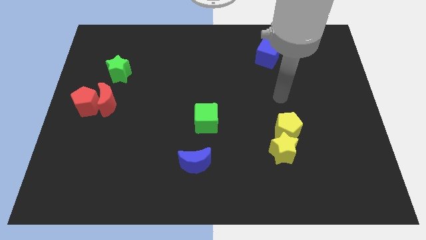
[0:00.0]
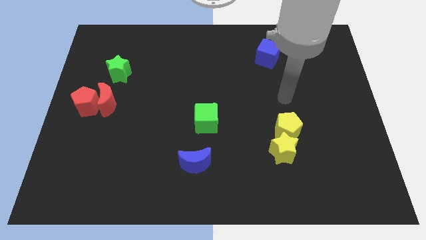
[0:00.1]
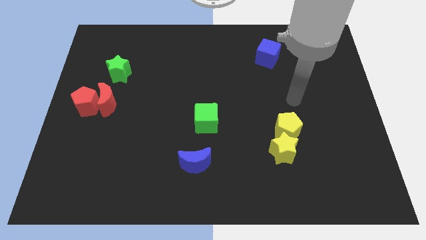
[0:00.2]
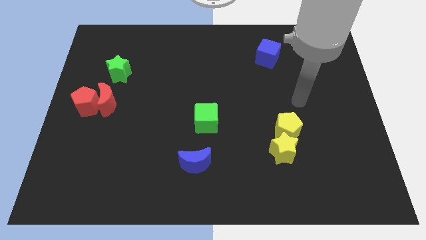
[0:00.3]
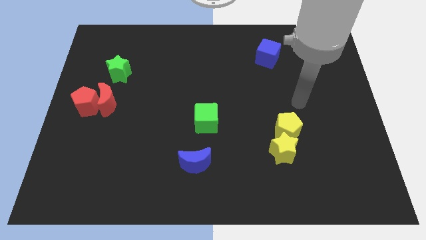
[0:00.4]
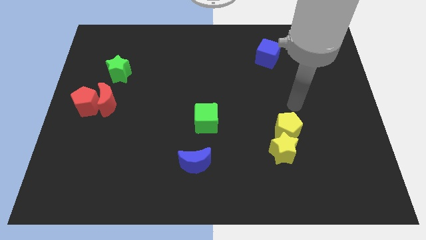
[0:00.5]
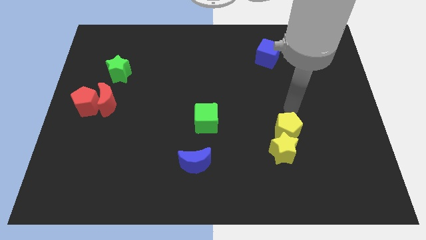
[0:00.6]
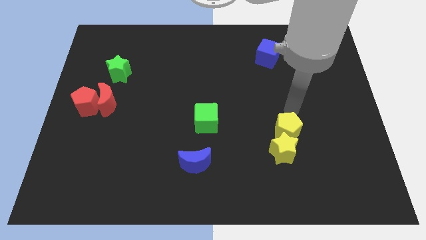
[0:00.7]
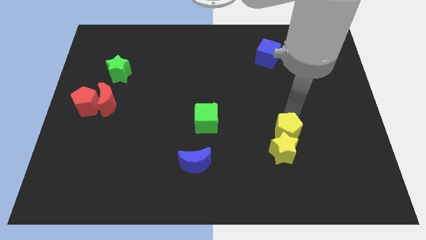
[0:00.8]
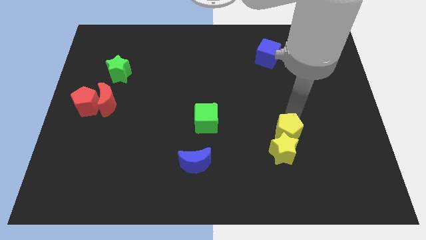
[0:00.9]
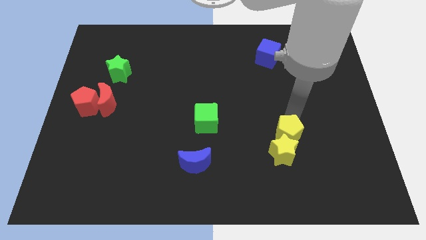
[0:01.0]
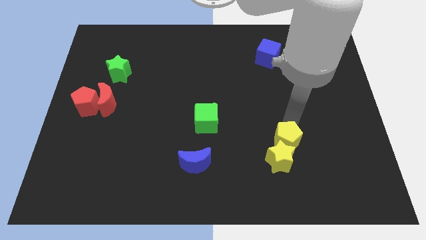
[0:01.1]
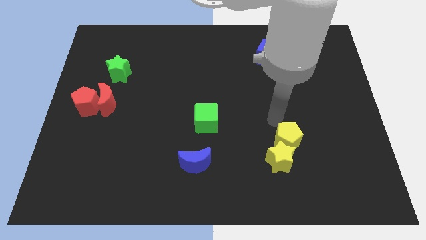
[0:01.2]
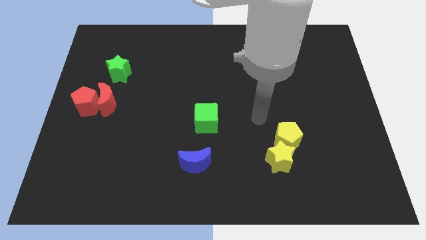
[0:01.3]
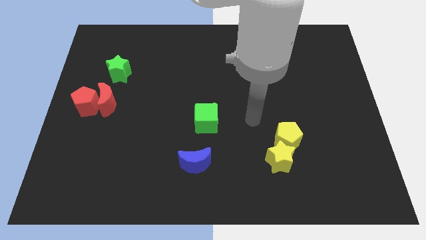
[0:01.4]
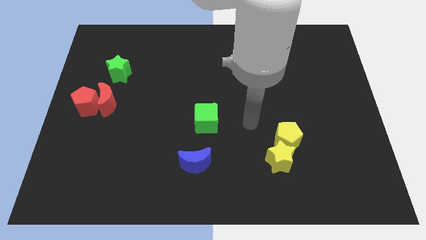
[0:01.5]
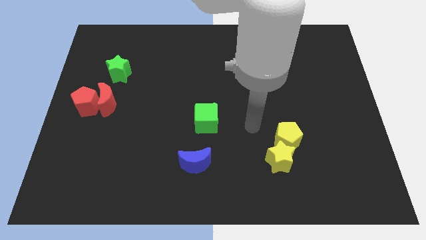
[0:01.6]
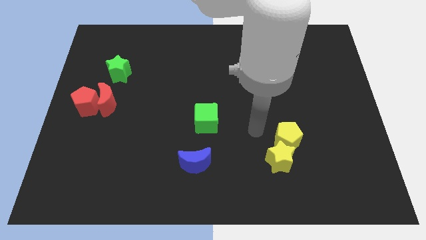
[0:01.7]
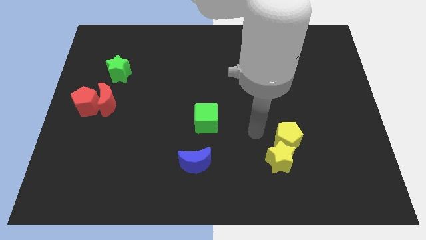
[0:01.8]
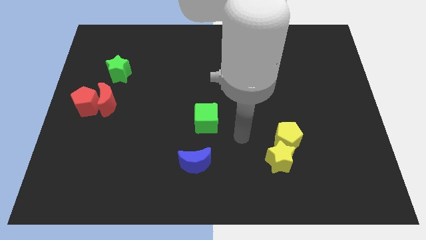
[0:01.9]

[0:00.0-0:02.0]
move the yellow blocks slightly to the bottom

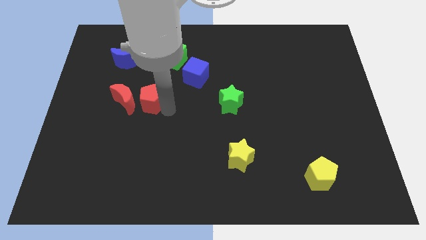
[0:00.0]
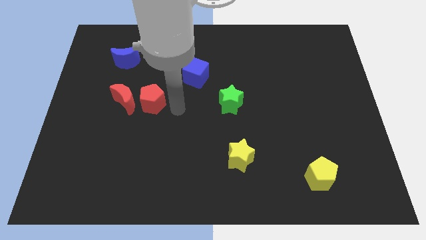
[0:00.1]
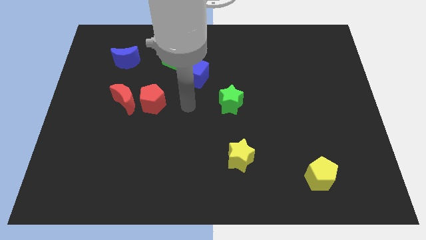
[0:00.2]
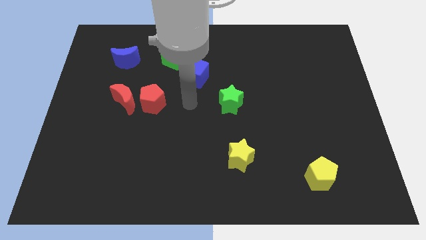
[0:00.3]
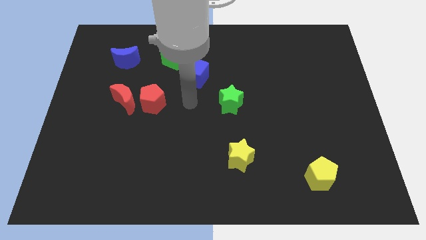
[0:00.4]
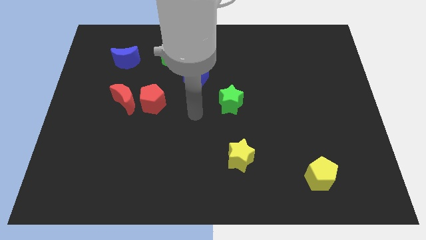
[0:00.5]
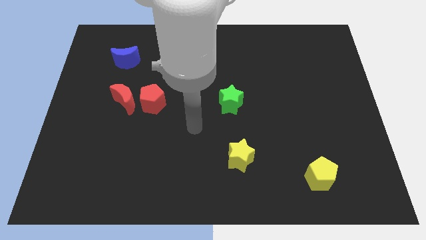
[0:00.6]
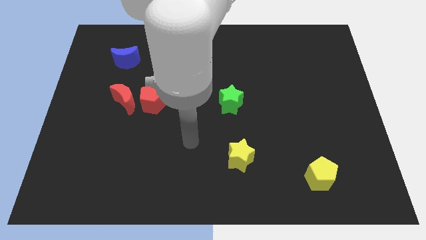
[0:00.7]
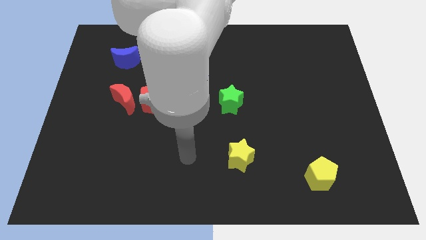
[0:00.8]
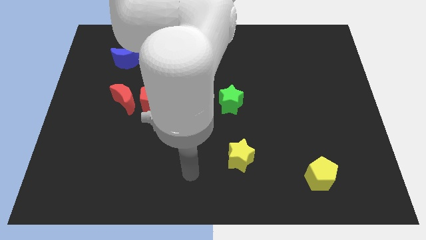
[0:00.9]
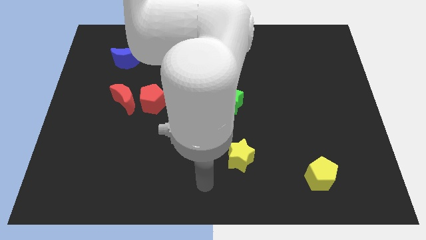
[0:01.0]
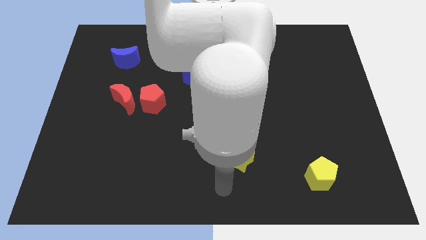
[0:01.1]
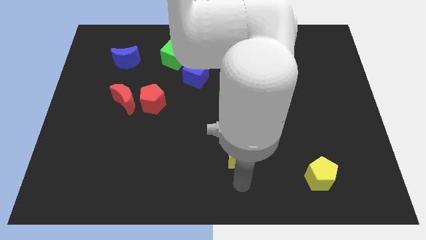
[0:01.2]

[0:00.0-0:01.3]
move your arm to the bottom of yellow star

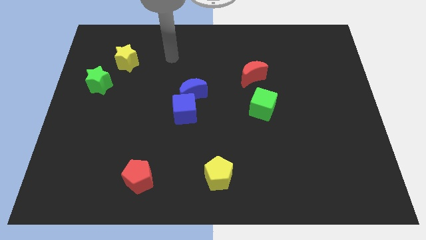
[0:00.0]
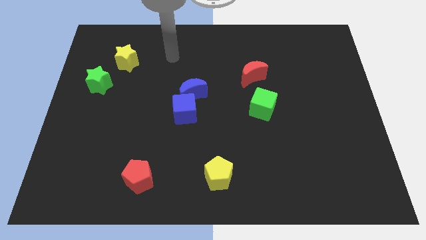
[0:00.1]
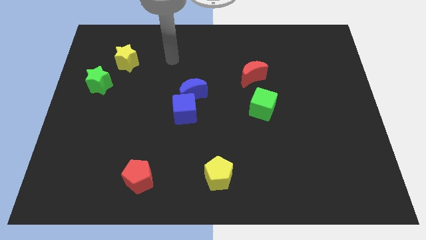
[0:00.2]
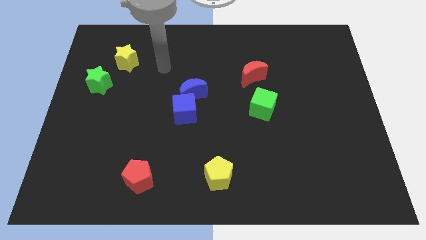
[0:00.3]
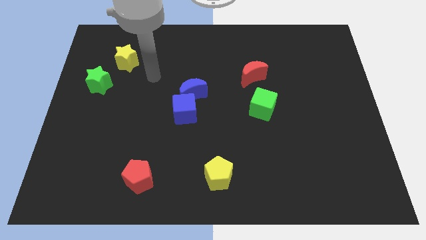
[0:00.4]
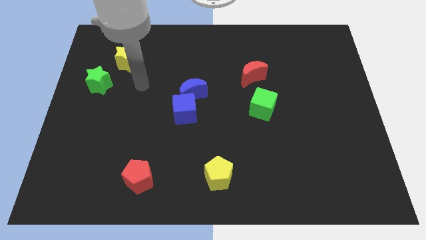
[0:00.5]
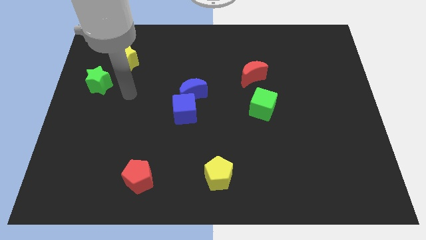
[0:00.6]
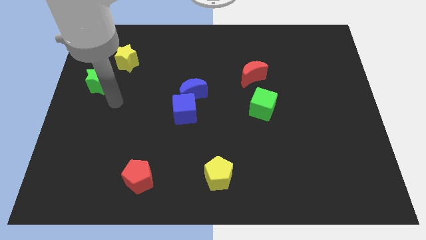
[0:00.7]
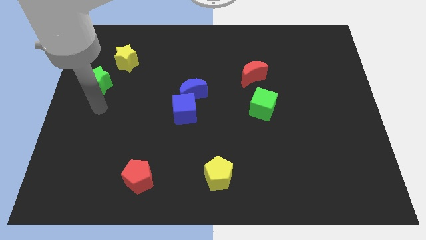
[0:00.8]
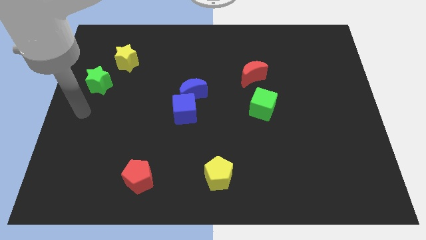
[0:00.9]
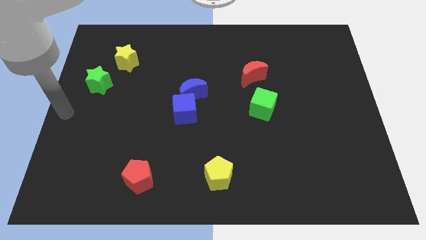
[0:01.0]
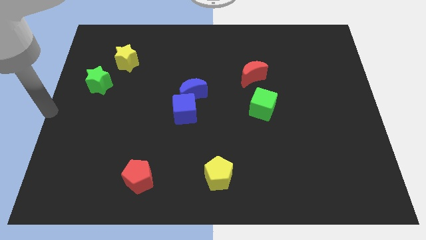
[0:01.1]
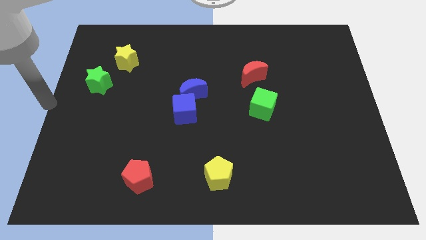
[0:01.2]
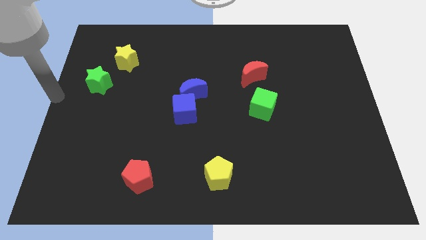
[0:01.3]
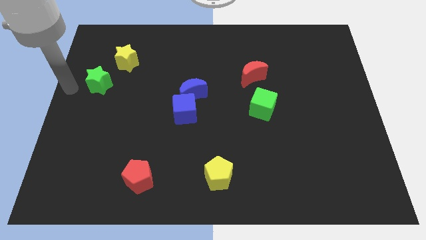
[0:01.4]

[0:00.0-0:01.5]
place your arm to the left side of the green star

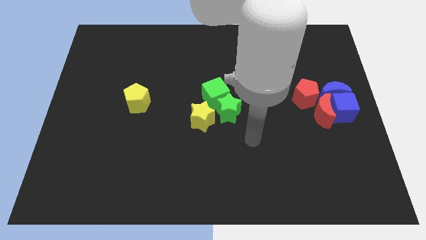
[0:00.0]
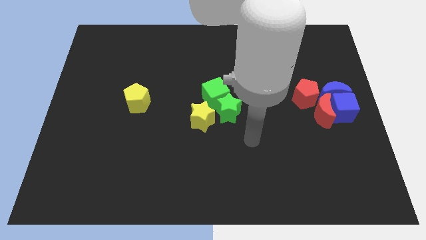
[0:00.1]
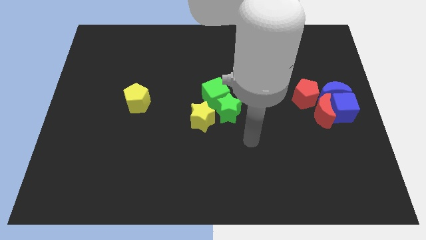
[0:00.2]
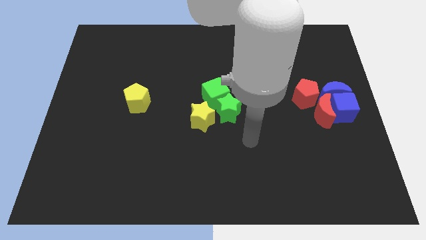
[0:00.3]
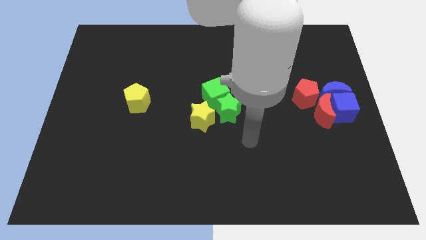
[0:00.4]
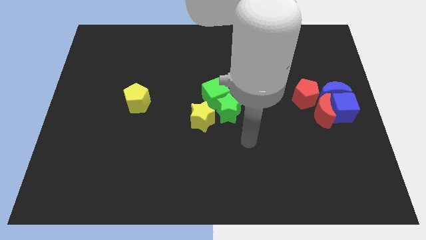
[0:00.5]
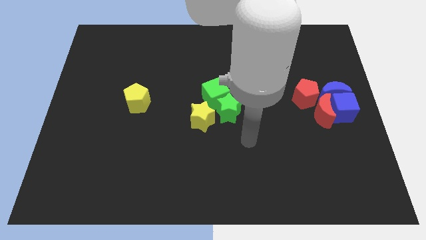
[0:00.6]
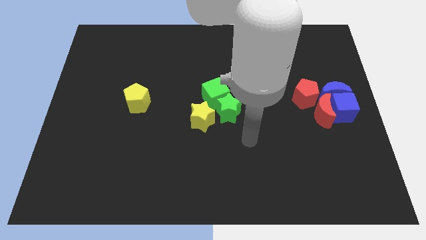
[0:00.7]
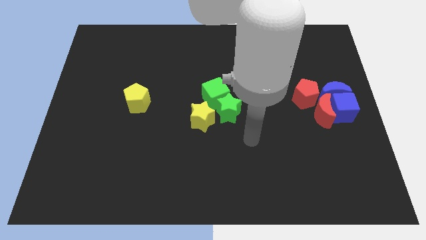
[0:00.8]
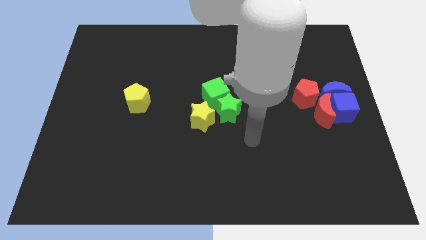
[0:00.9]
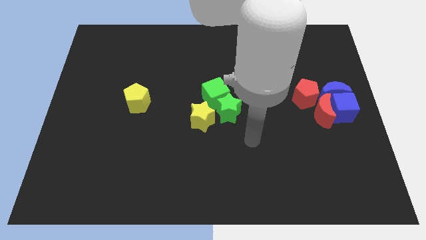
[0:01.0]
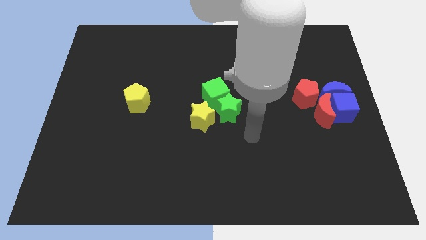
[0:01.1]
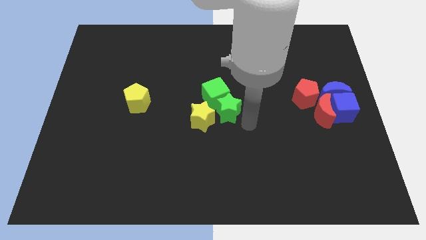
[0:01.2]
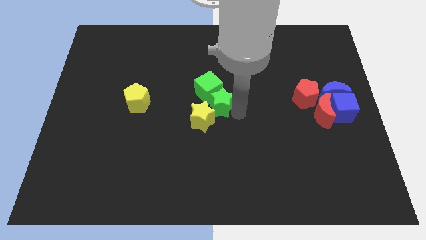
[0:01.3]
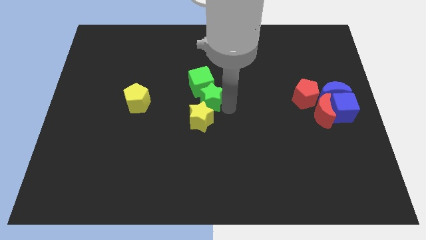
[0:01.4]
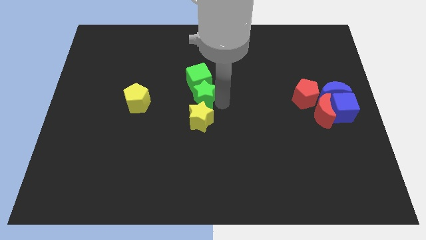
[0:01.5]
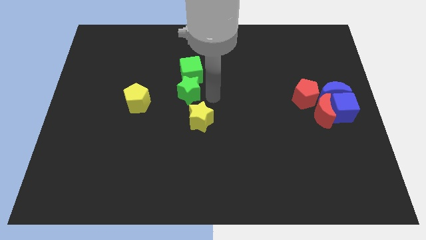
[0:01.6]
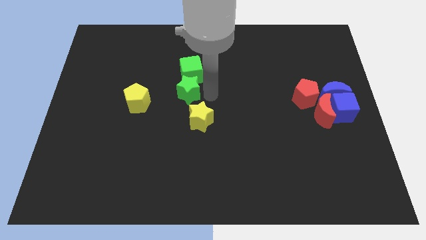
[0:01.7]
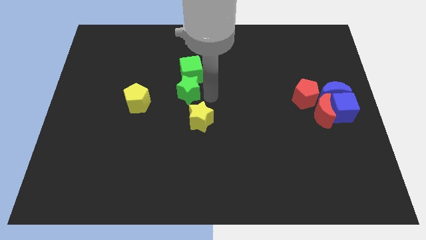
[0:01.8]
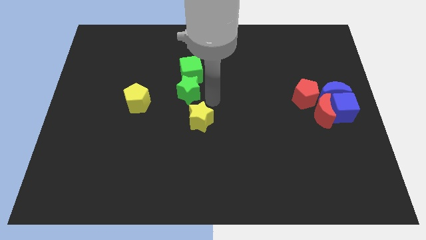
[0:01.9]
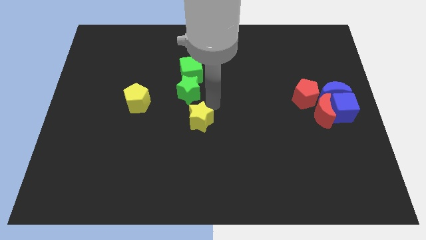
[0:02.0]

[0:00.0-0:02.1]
move the green star and green cube towards top center

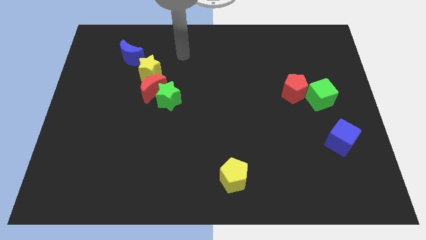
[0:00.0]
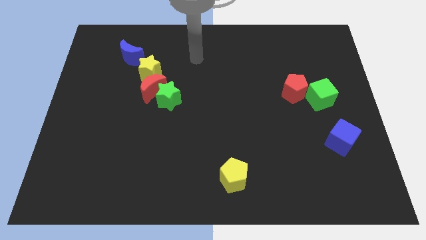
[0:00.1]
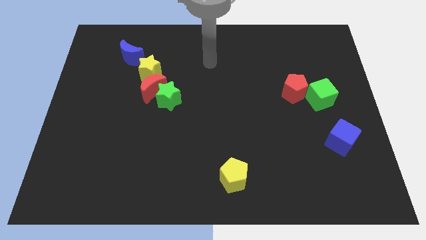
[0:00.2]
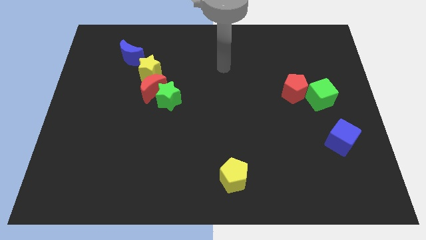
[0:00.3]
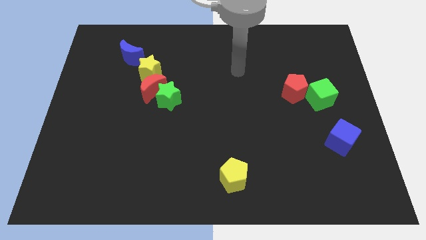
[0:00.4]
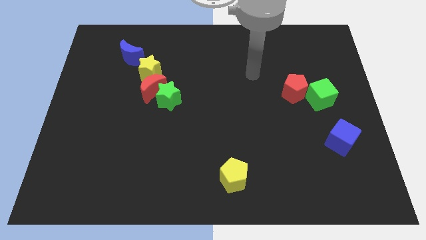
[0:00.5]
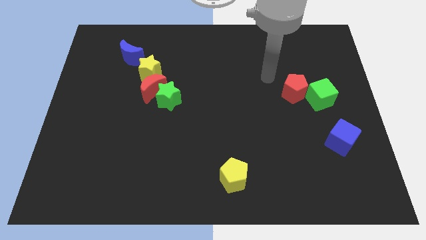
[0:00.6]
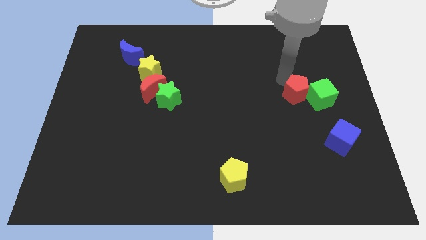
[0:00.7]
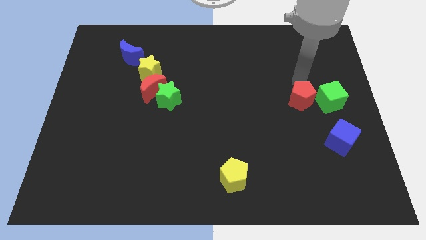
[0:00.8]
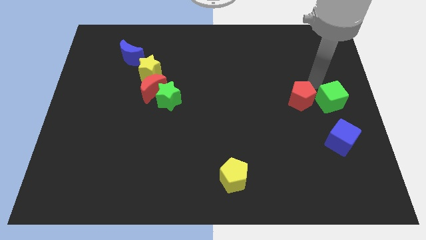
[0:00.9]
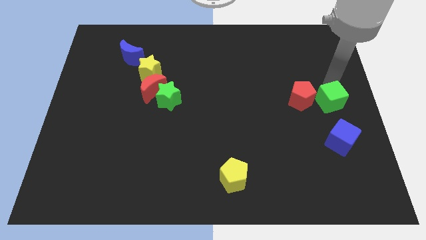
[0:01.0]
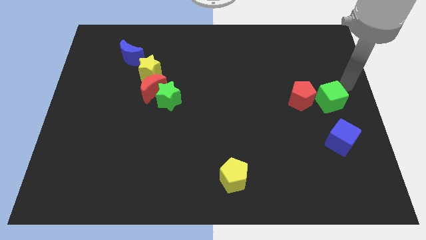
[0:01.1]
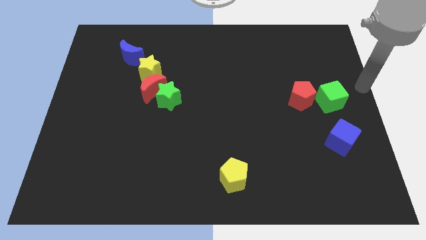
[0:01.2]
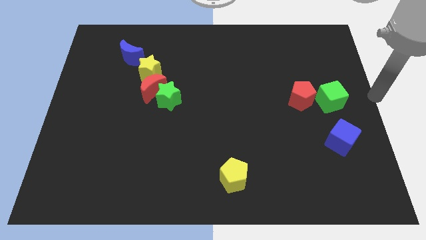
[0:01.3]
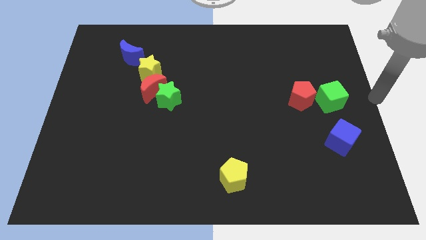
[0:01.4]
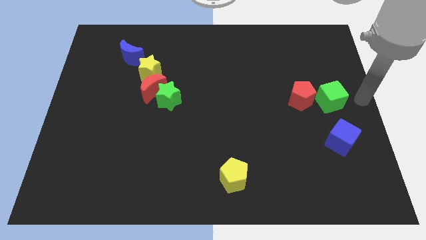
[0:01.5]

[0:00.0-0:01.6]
move the red pentagon along with the green cube slightly towards the bottom

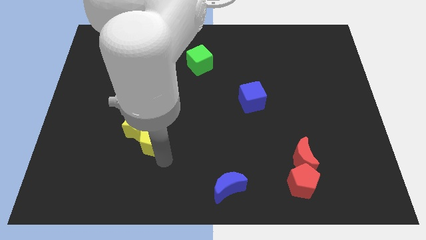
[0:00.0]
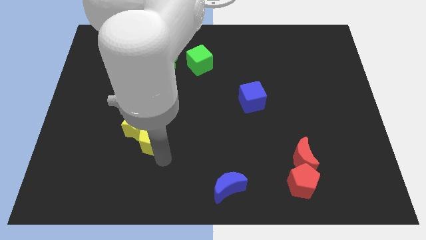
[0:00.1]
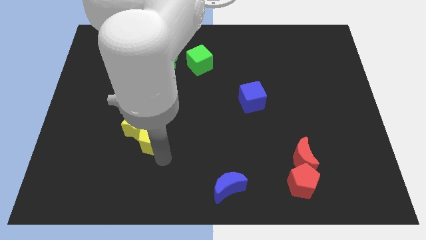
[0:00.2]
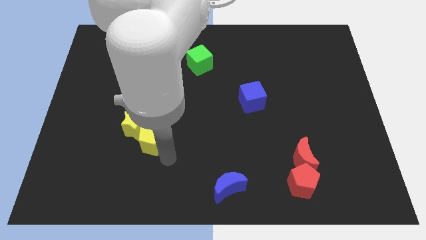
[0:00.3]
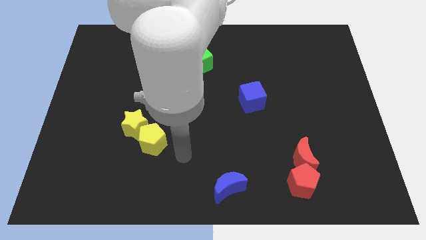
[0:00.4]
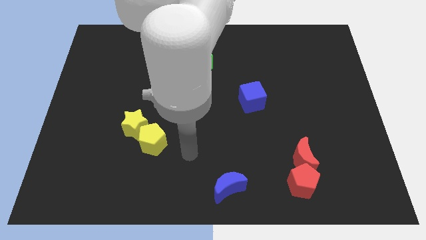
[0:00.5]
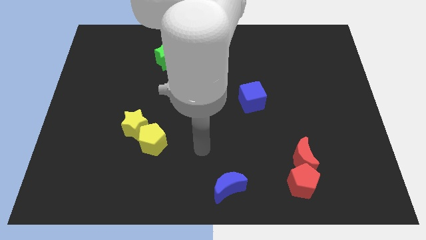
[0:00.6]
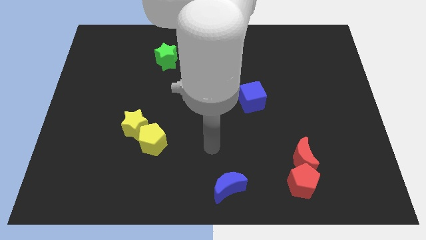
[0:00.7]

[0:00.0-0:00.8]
move your arm away from the yellow pentagon
